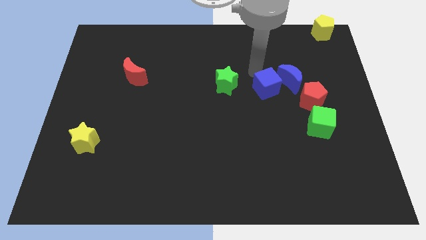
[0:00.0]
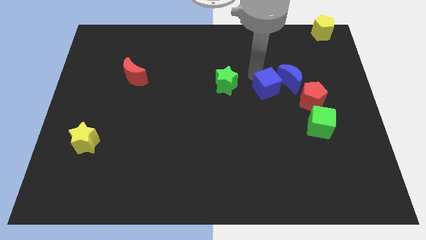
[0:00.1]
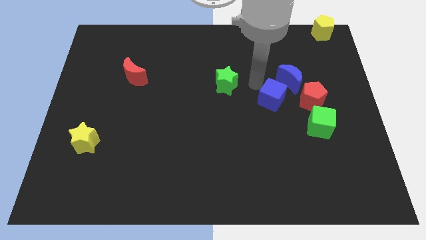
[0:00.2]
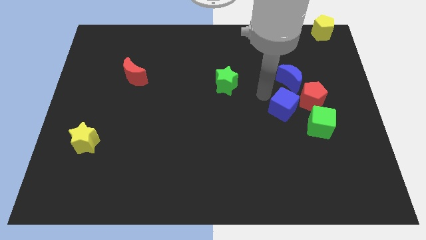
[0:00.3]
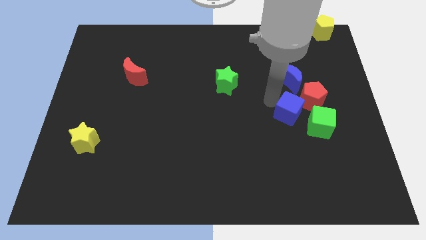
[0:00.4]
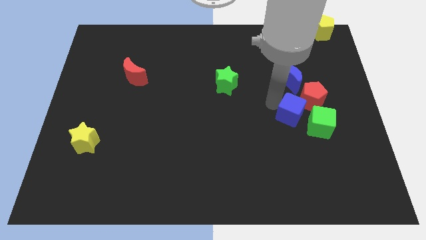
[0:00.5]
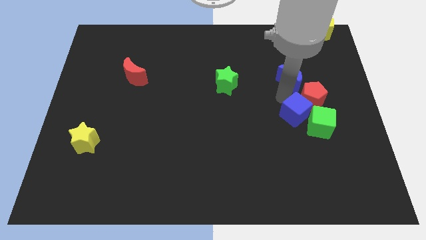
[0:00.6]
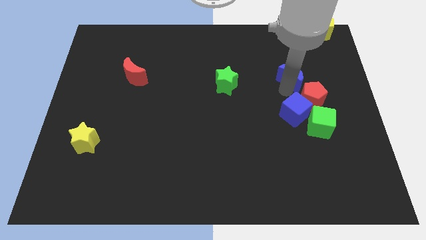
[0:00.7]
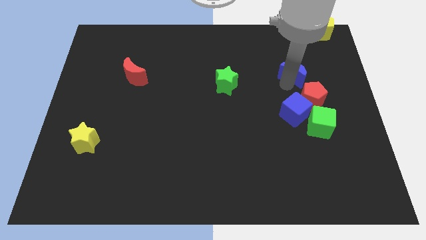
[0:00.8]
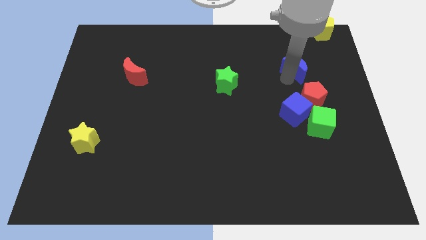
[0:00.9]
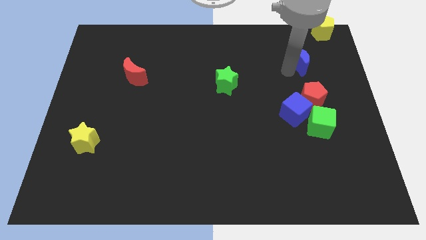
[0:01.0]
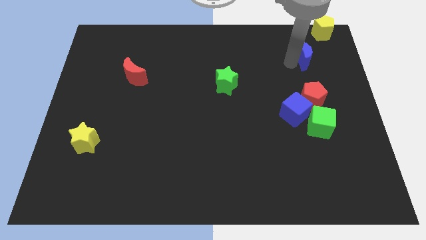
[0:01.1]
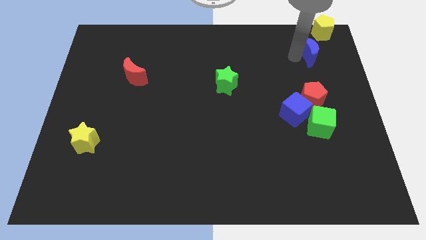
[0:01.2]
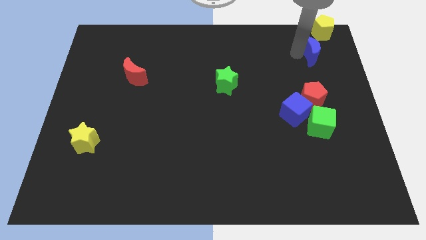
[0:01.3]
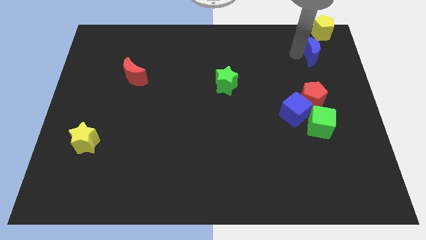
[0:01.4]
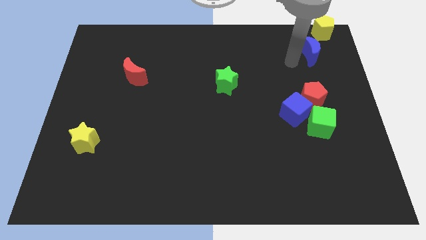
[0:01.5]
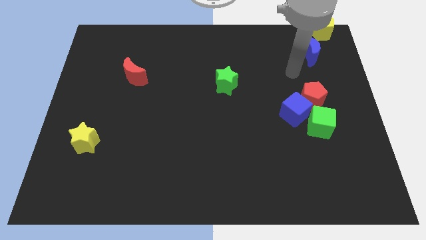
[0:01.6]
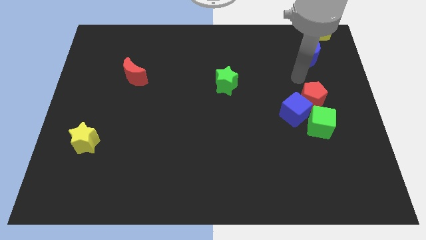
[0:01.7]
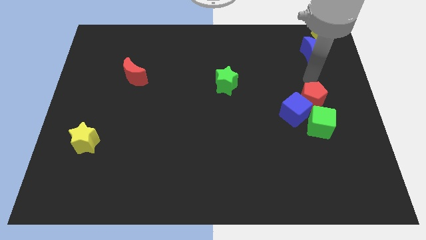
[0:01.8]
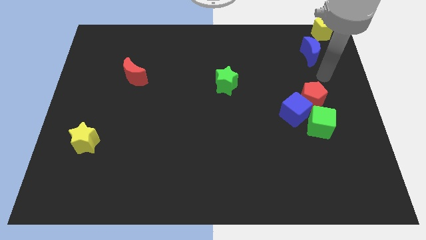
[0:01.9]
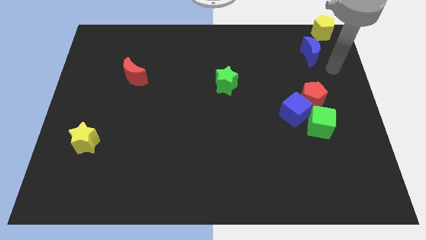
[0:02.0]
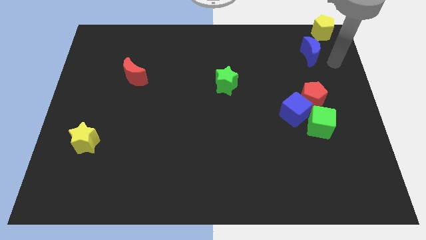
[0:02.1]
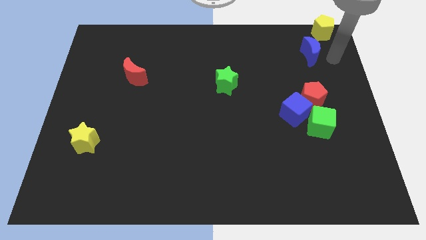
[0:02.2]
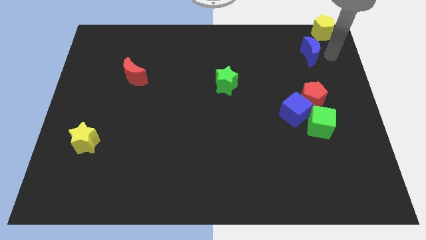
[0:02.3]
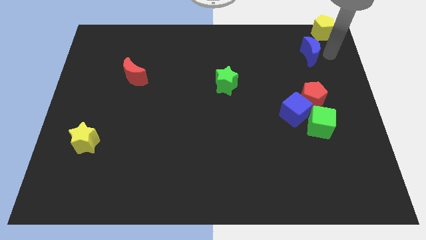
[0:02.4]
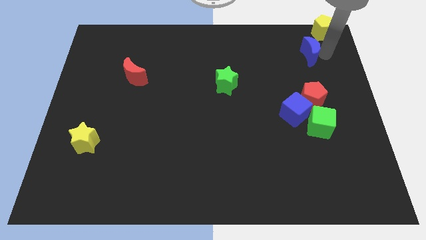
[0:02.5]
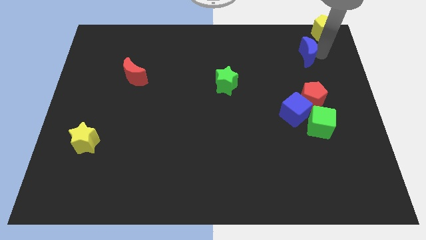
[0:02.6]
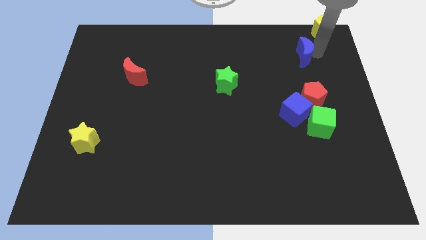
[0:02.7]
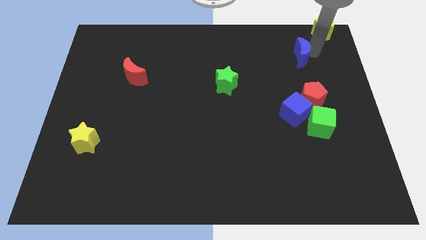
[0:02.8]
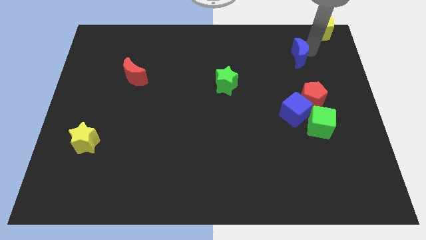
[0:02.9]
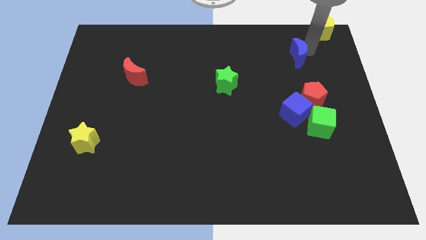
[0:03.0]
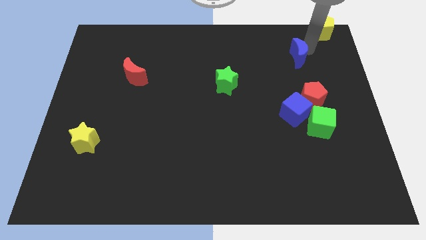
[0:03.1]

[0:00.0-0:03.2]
separate the blue blocks

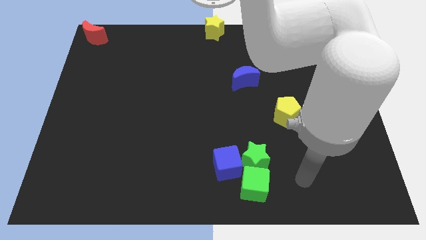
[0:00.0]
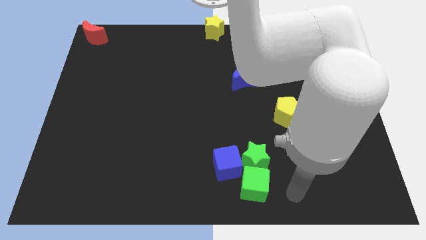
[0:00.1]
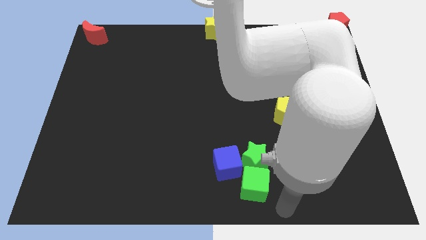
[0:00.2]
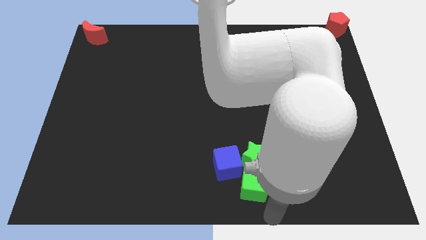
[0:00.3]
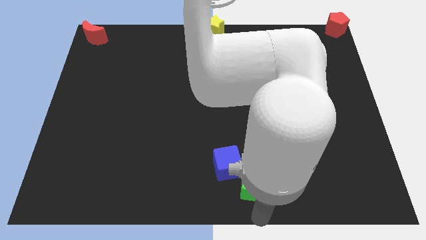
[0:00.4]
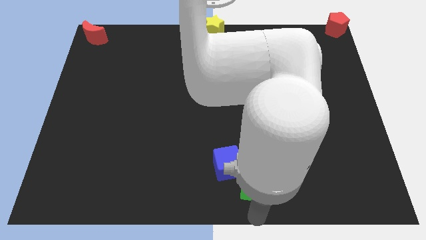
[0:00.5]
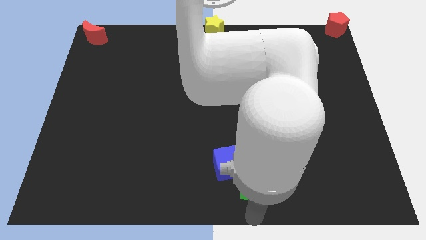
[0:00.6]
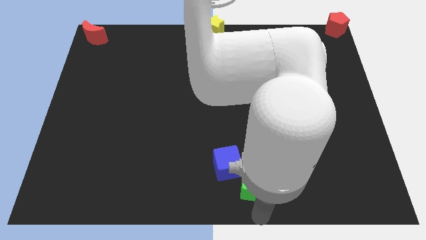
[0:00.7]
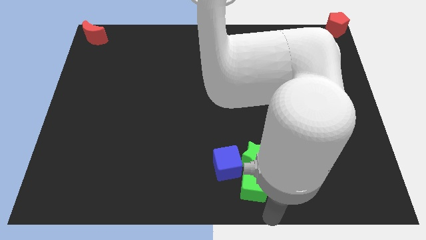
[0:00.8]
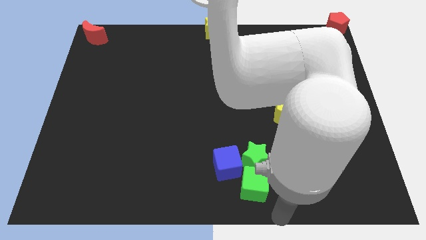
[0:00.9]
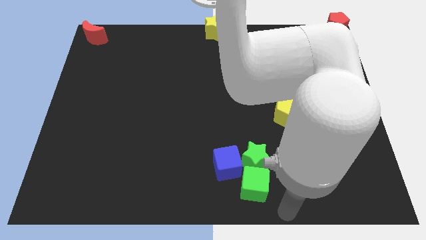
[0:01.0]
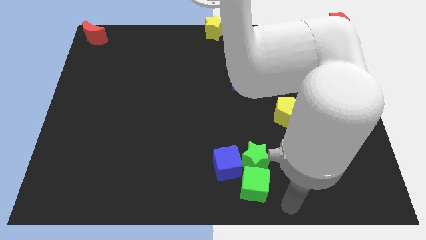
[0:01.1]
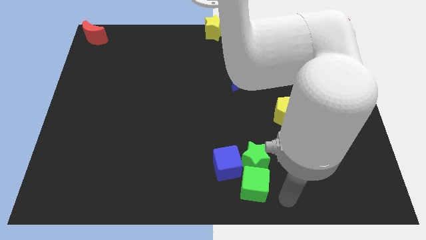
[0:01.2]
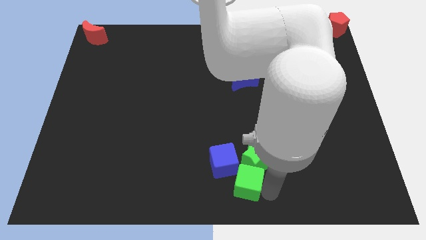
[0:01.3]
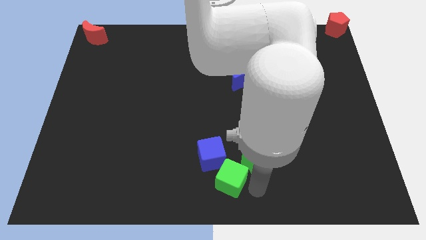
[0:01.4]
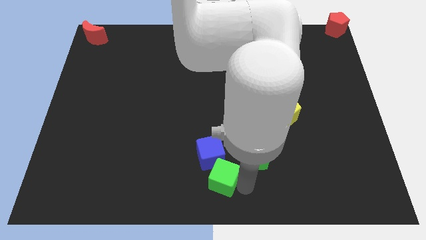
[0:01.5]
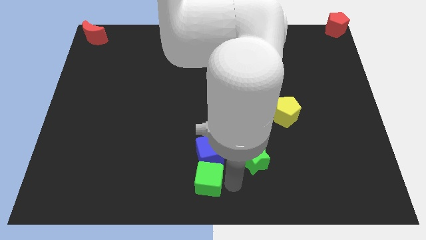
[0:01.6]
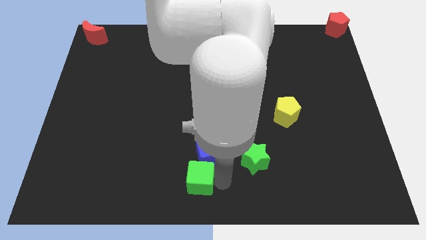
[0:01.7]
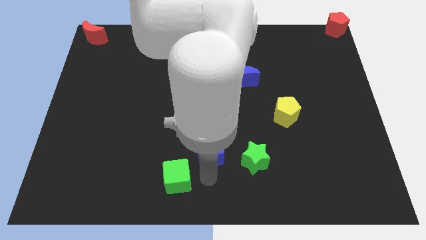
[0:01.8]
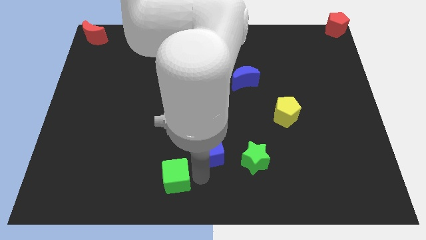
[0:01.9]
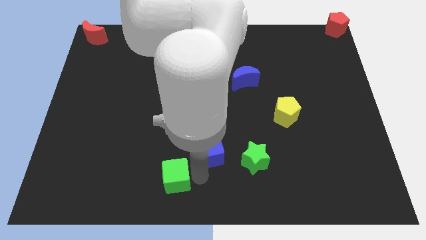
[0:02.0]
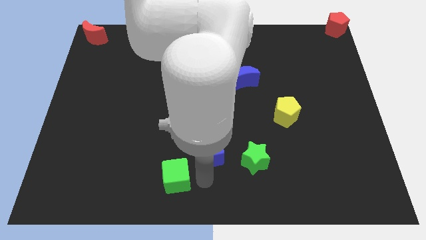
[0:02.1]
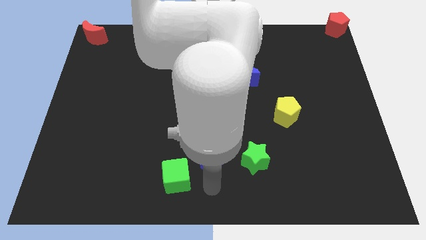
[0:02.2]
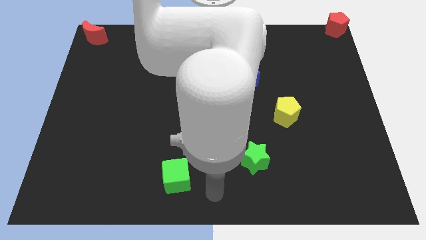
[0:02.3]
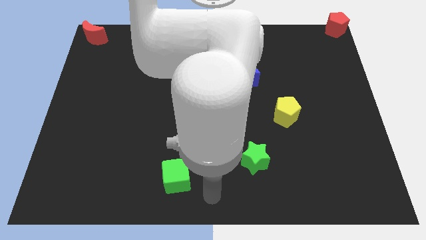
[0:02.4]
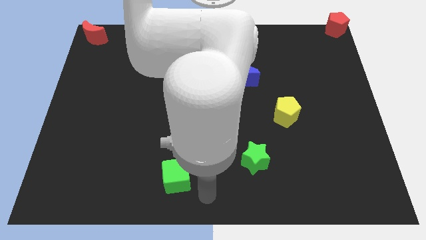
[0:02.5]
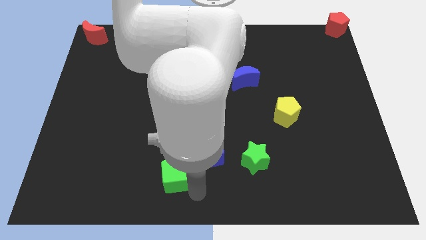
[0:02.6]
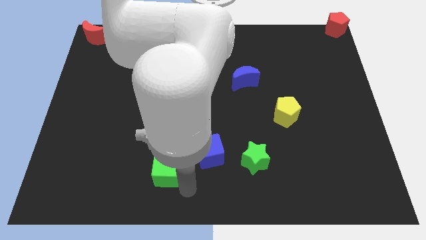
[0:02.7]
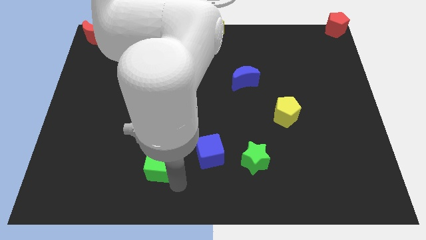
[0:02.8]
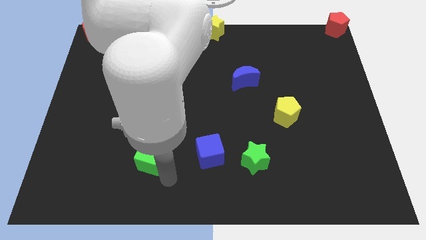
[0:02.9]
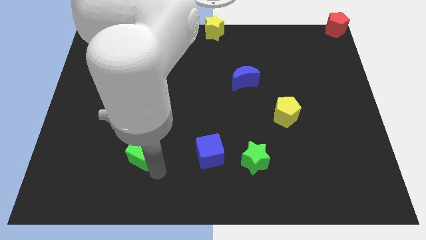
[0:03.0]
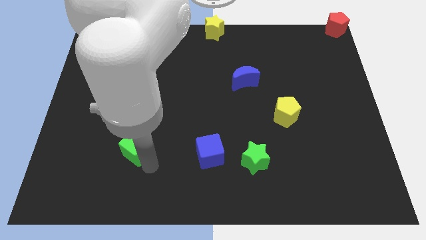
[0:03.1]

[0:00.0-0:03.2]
place the green cube to the left of blue cube

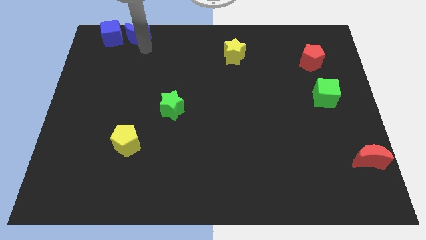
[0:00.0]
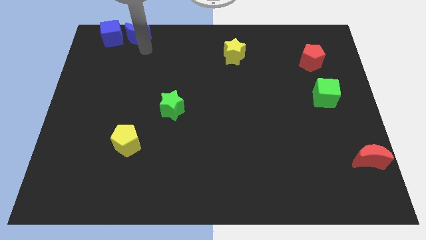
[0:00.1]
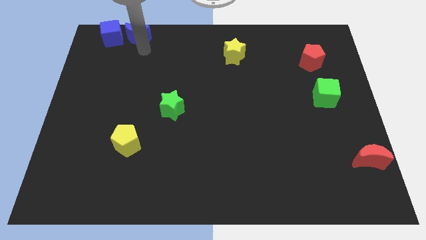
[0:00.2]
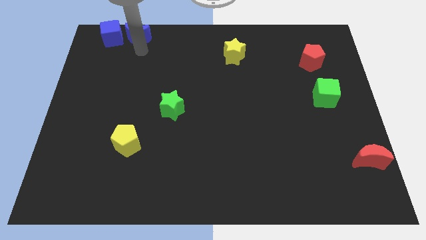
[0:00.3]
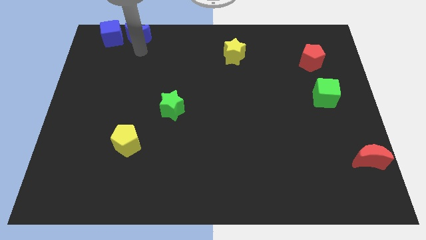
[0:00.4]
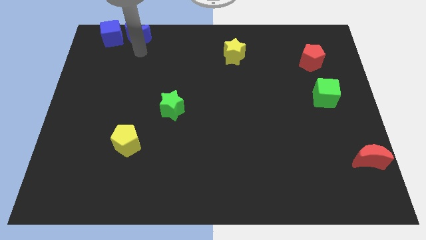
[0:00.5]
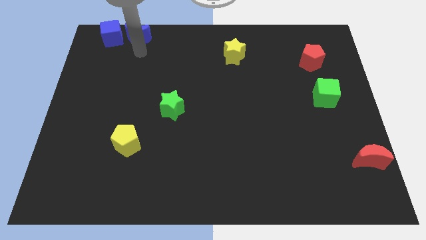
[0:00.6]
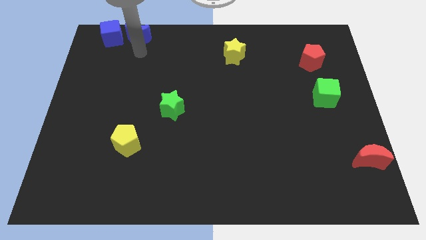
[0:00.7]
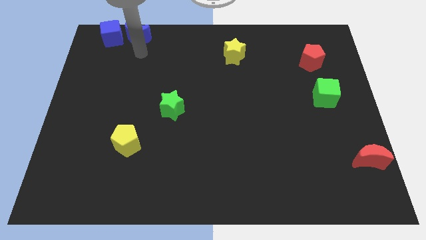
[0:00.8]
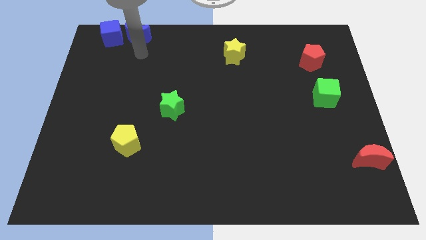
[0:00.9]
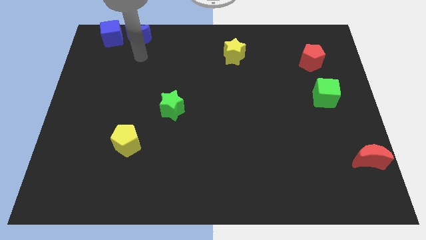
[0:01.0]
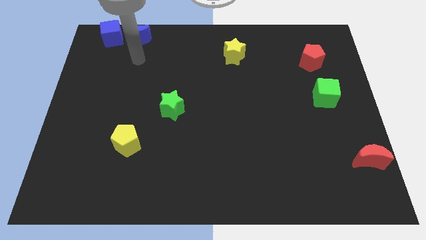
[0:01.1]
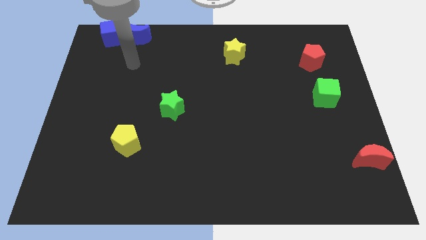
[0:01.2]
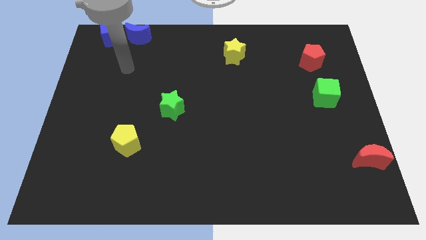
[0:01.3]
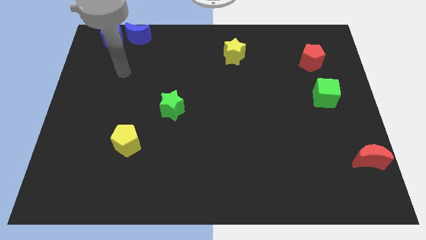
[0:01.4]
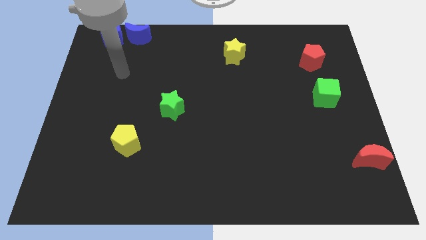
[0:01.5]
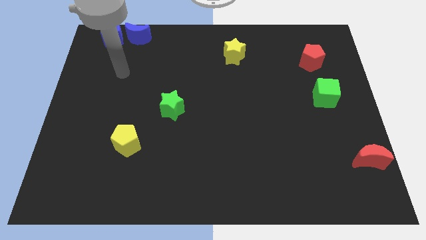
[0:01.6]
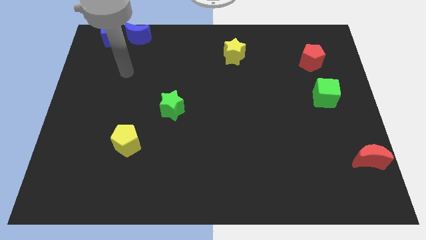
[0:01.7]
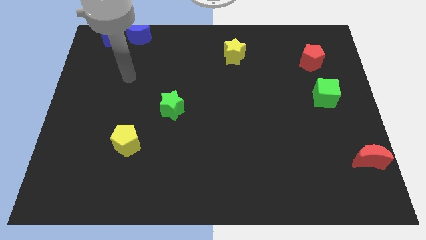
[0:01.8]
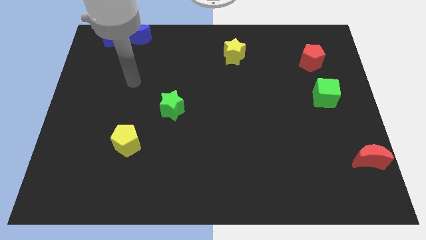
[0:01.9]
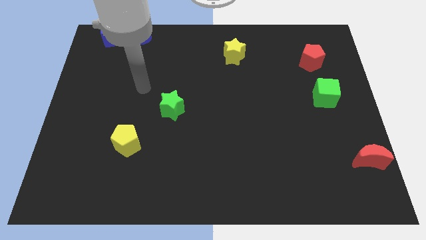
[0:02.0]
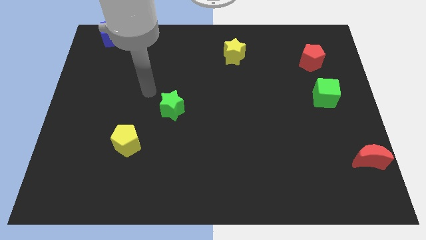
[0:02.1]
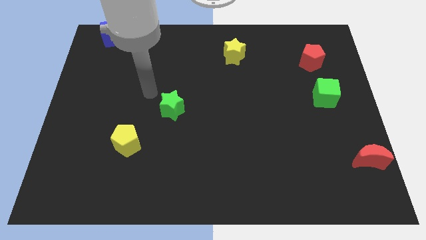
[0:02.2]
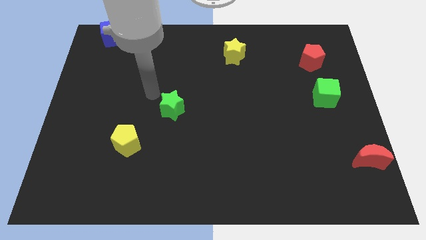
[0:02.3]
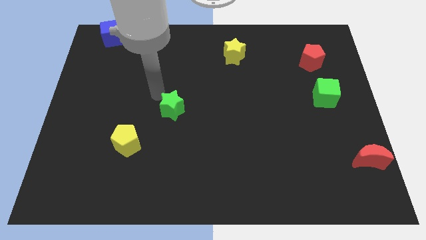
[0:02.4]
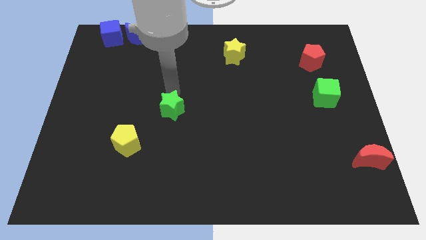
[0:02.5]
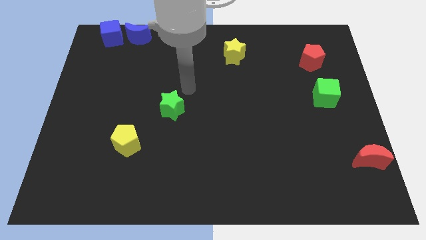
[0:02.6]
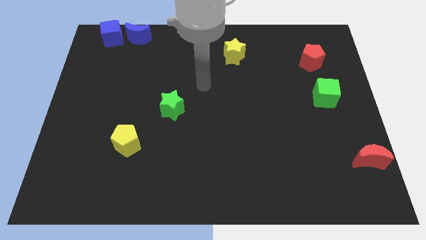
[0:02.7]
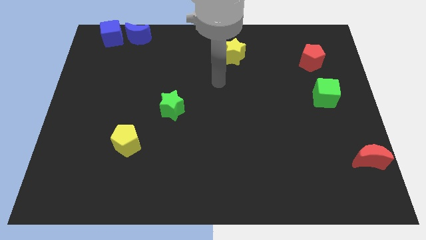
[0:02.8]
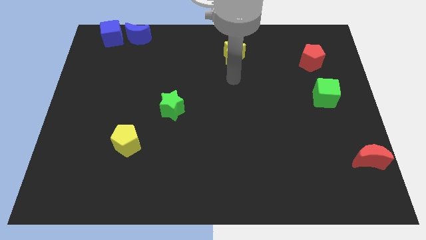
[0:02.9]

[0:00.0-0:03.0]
place arm at the bottom of yellow star
